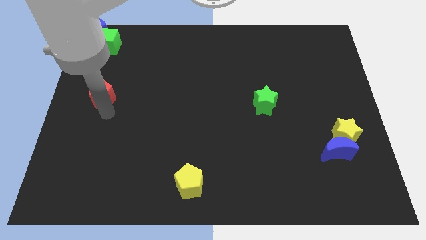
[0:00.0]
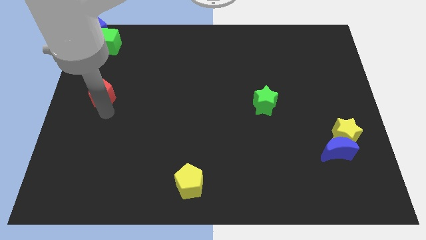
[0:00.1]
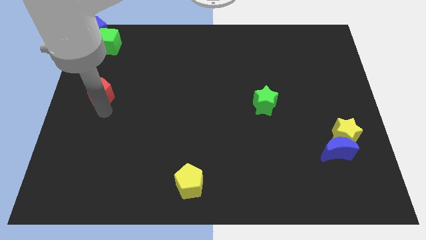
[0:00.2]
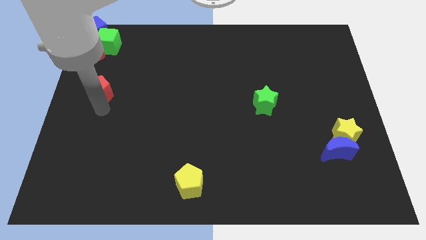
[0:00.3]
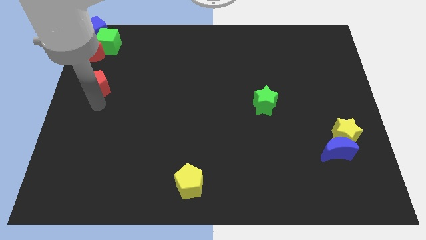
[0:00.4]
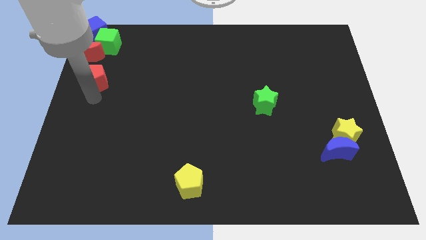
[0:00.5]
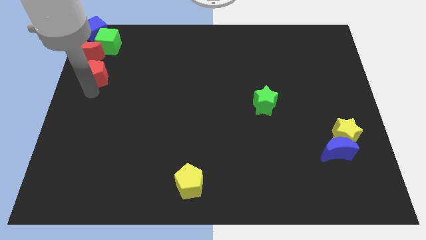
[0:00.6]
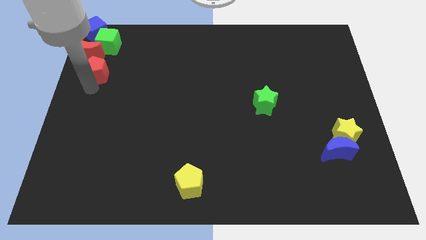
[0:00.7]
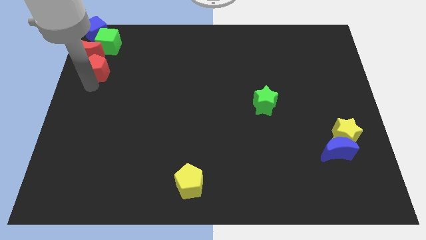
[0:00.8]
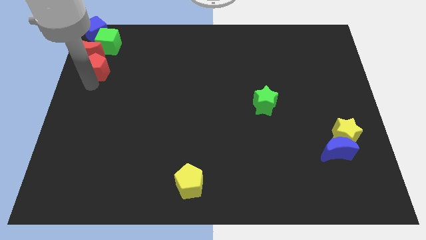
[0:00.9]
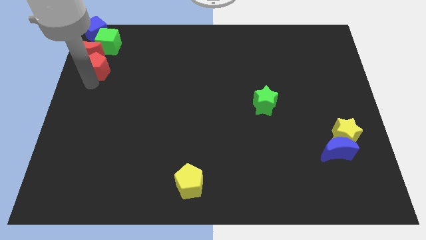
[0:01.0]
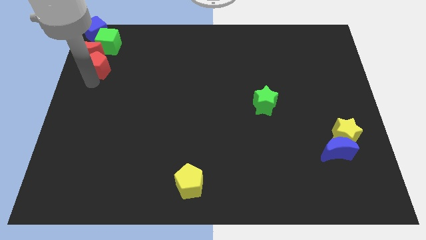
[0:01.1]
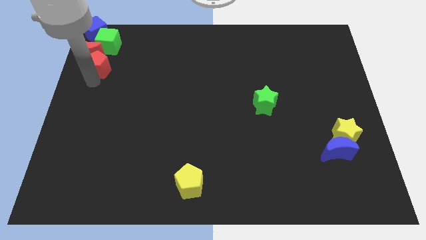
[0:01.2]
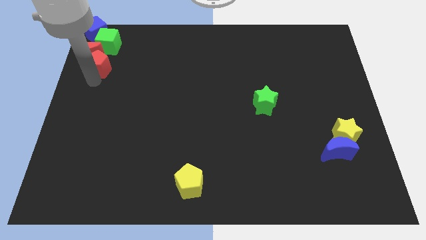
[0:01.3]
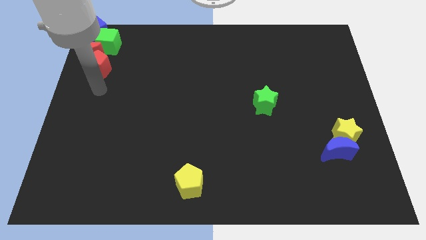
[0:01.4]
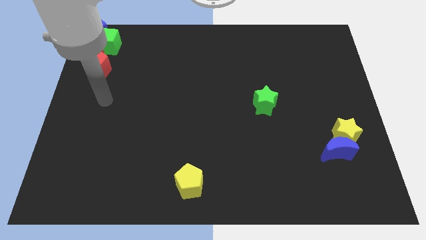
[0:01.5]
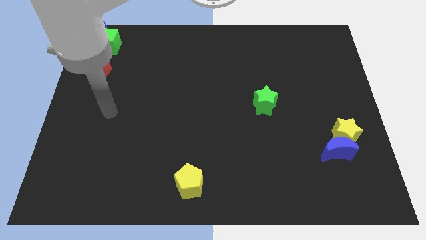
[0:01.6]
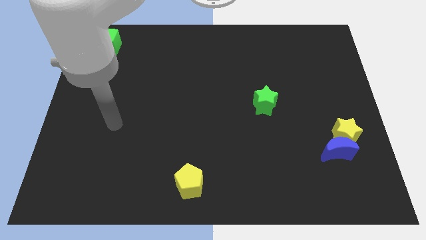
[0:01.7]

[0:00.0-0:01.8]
move red pentagon into red crescent

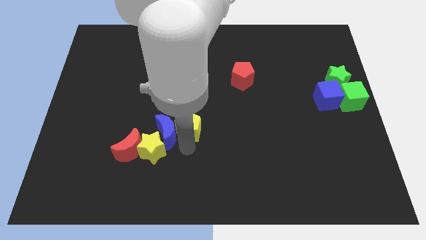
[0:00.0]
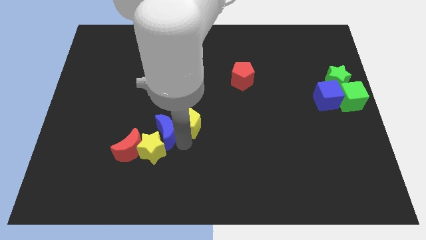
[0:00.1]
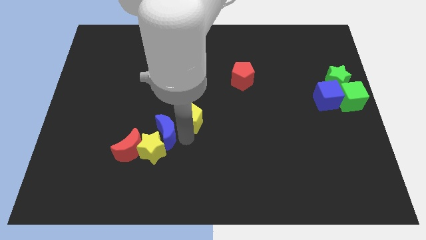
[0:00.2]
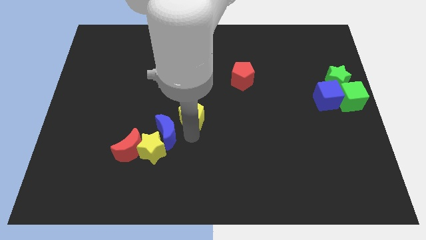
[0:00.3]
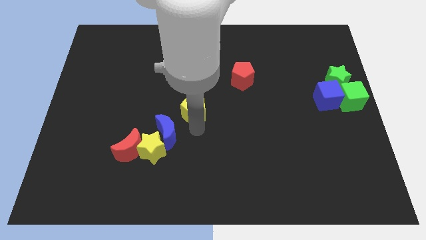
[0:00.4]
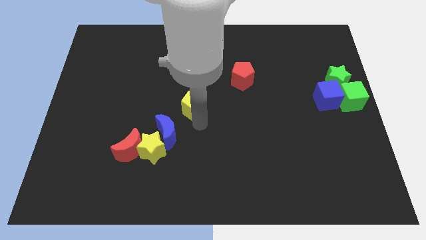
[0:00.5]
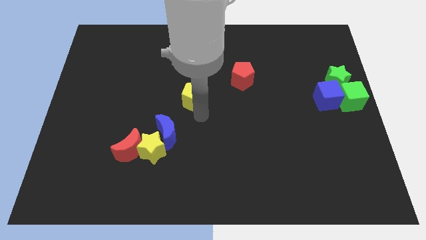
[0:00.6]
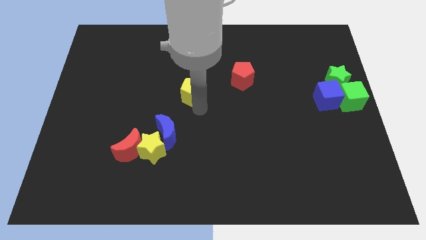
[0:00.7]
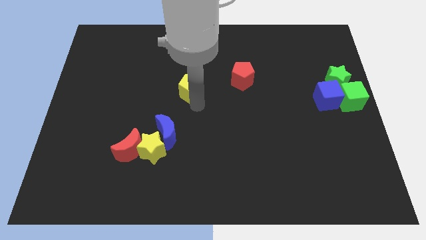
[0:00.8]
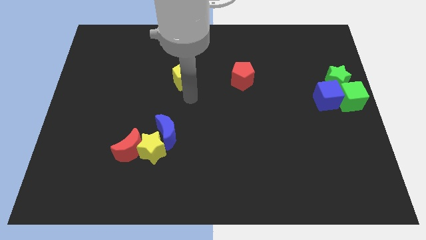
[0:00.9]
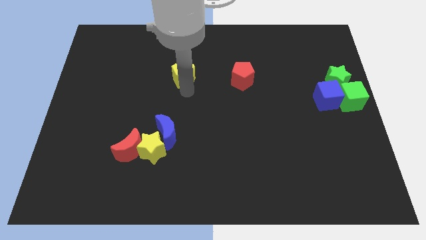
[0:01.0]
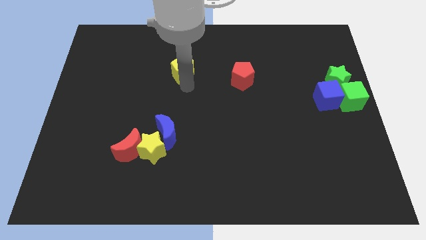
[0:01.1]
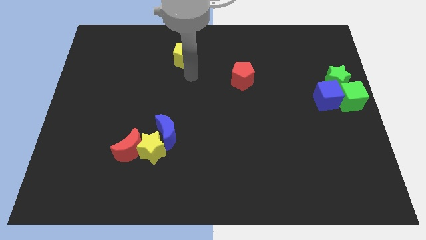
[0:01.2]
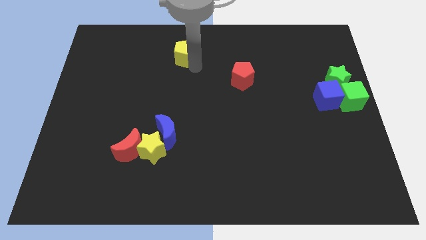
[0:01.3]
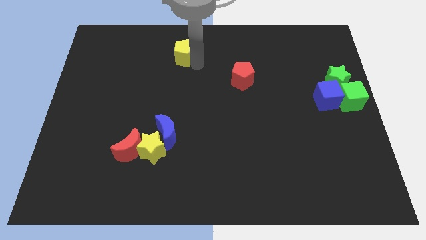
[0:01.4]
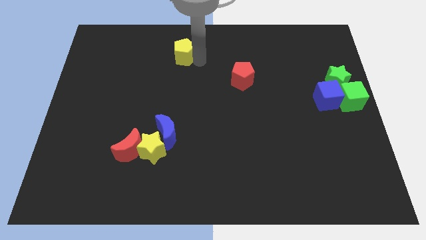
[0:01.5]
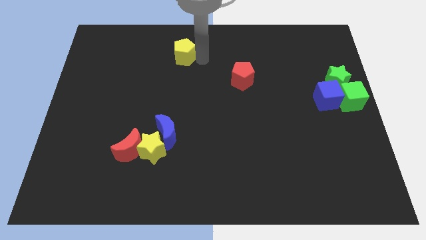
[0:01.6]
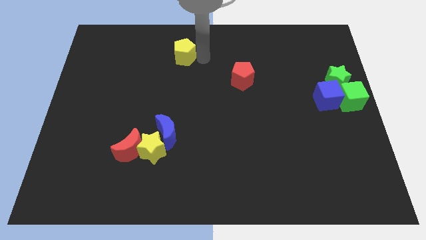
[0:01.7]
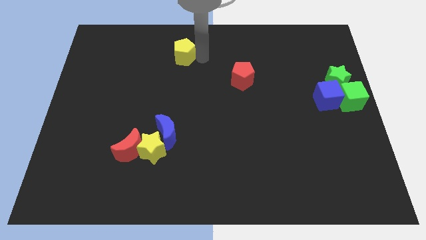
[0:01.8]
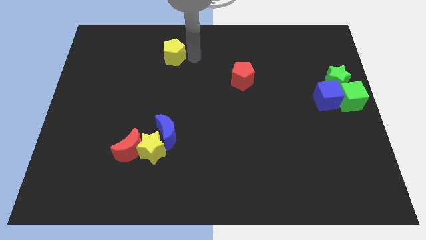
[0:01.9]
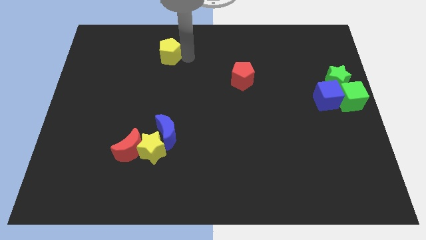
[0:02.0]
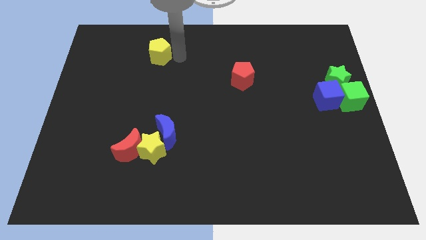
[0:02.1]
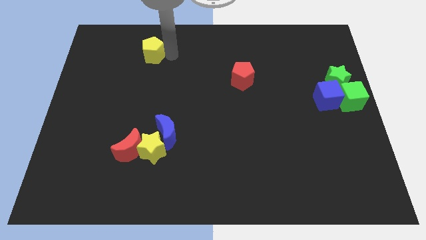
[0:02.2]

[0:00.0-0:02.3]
push the yellow pentagon to the top of the red crescent

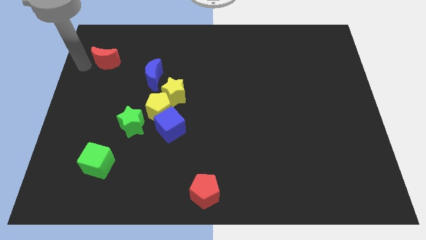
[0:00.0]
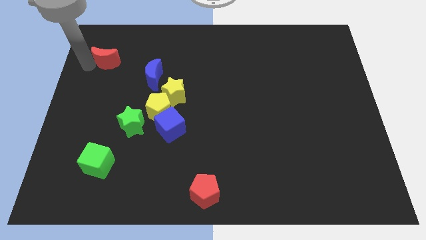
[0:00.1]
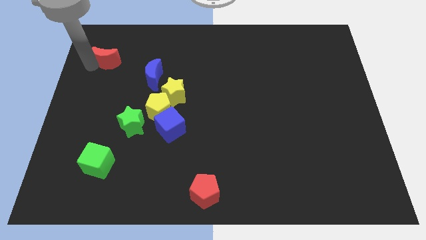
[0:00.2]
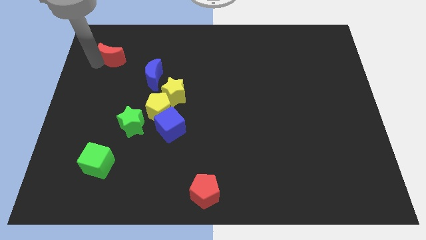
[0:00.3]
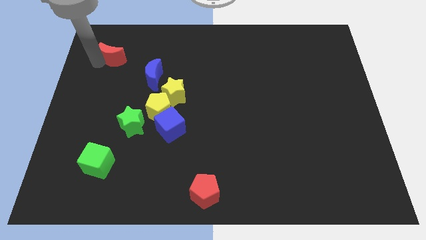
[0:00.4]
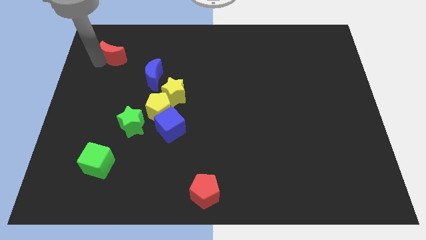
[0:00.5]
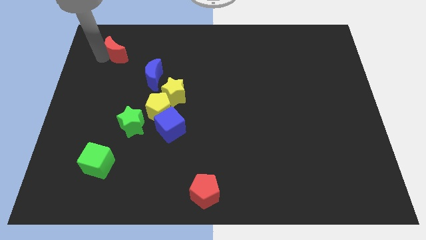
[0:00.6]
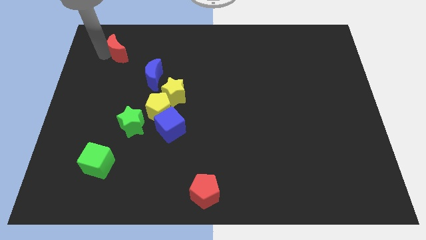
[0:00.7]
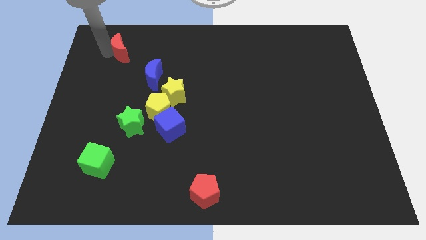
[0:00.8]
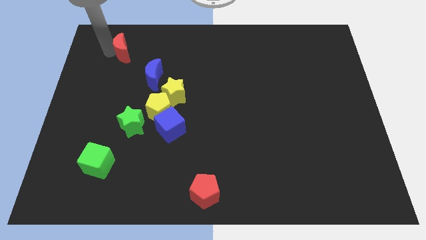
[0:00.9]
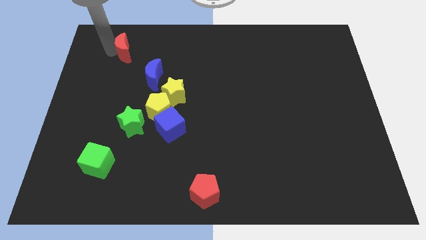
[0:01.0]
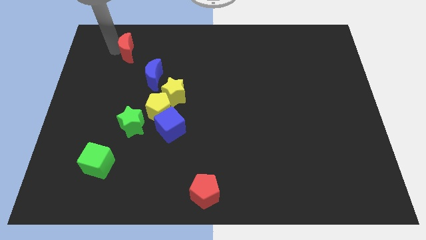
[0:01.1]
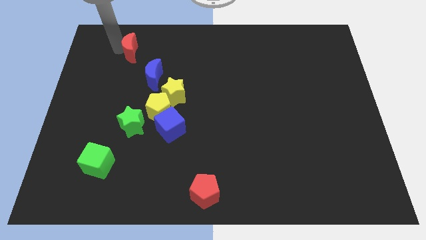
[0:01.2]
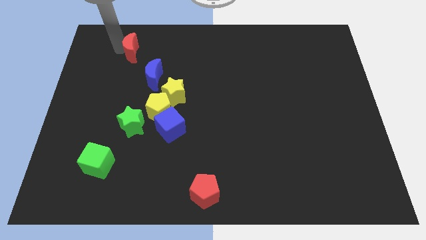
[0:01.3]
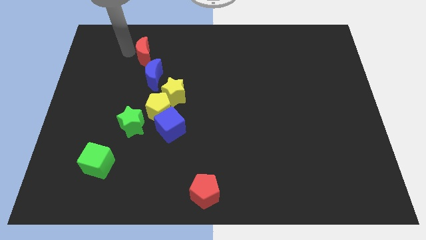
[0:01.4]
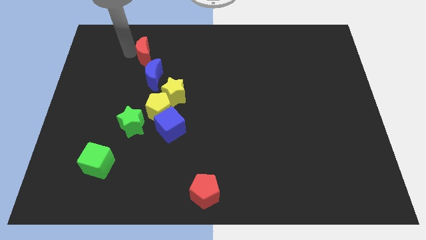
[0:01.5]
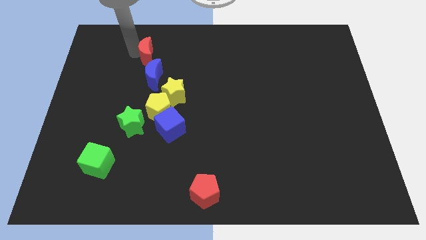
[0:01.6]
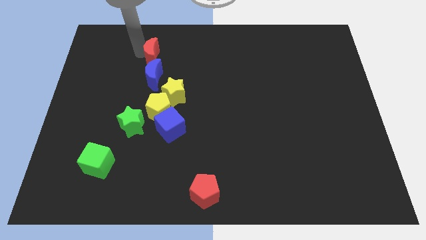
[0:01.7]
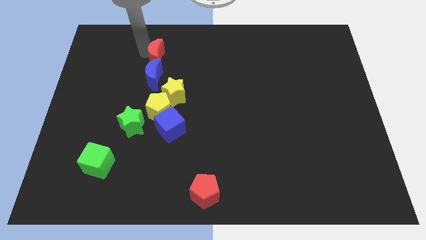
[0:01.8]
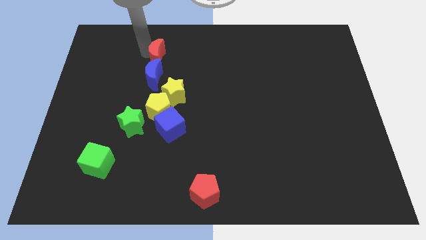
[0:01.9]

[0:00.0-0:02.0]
place the red crescent above the blue moon

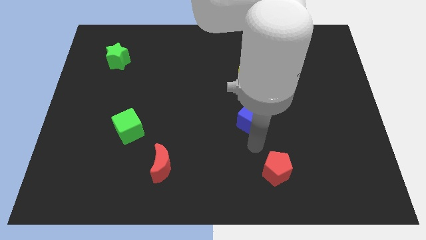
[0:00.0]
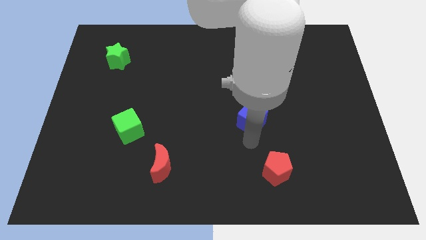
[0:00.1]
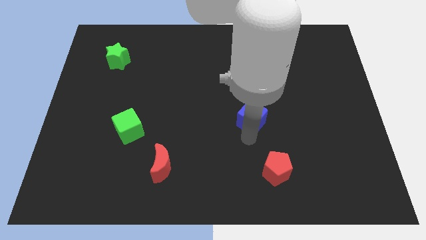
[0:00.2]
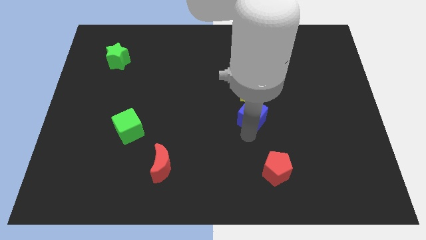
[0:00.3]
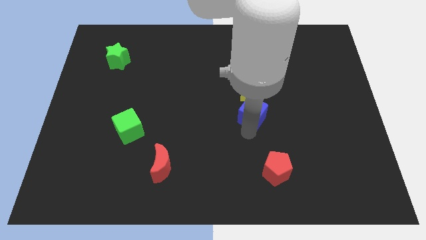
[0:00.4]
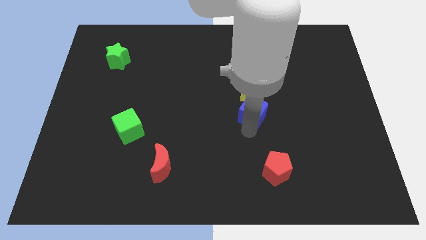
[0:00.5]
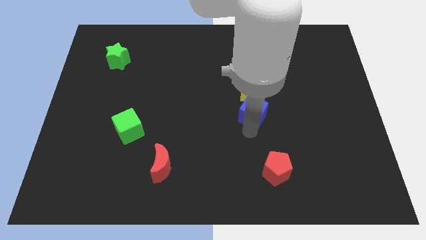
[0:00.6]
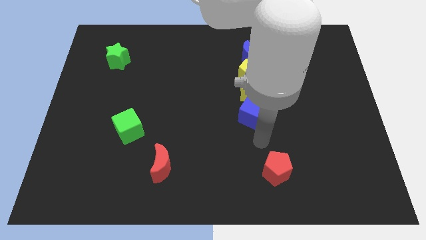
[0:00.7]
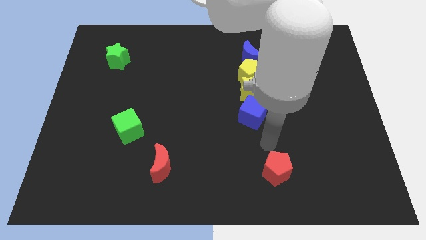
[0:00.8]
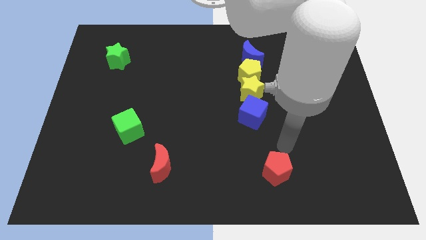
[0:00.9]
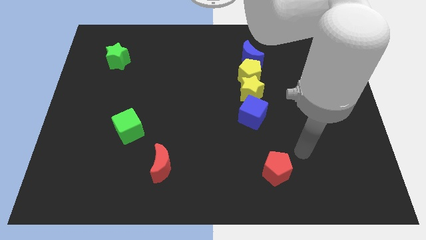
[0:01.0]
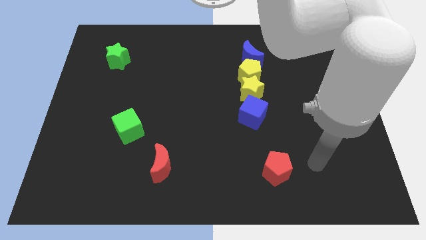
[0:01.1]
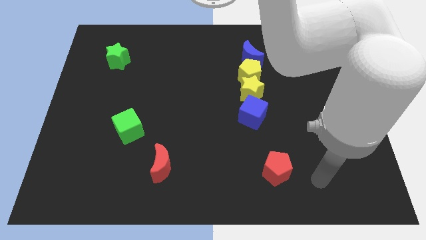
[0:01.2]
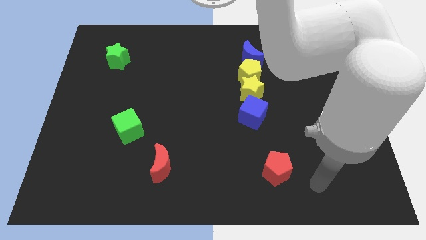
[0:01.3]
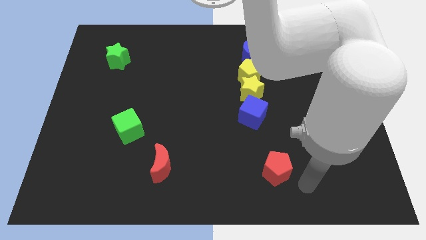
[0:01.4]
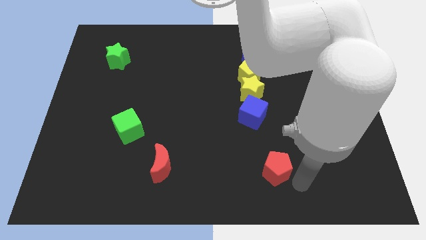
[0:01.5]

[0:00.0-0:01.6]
push the blue cube towards top

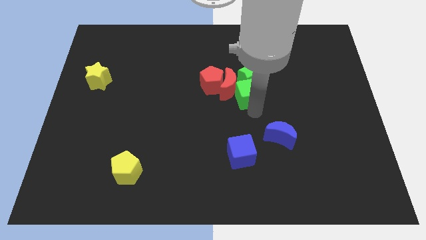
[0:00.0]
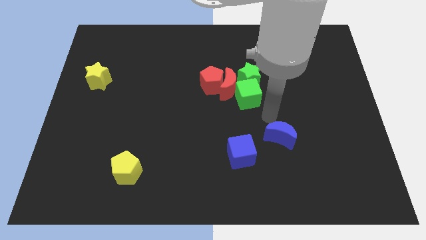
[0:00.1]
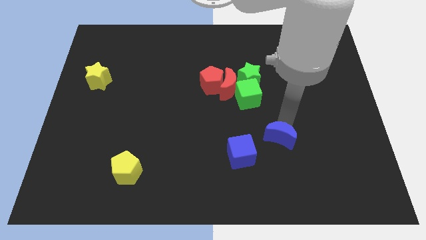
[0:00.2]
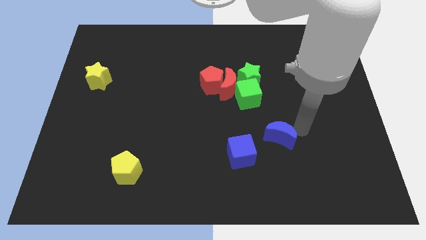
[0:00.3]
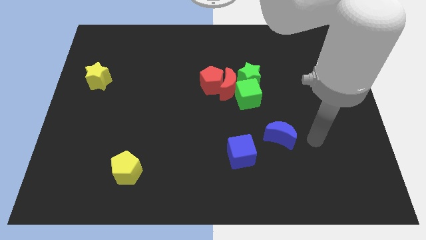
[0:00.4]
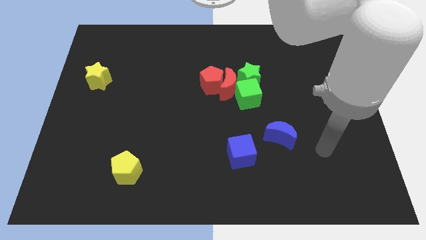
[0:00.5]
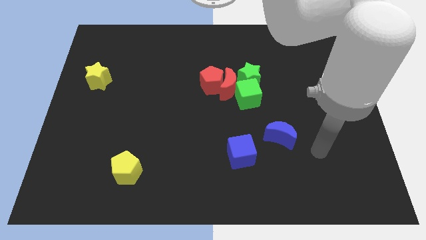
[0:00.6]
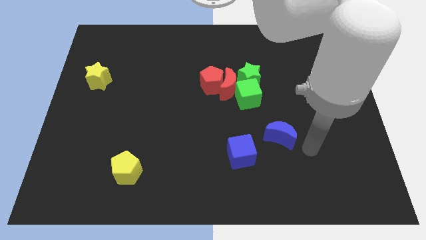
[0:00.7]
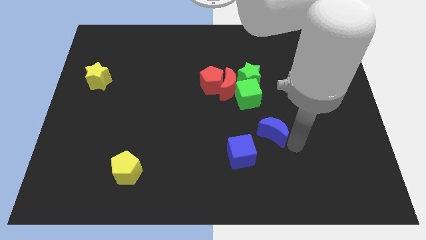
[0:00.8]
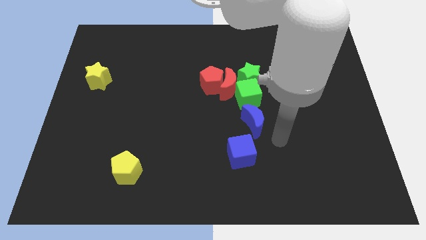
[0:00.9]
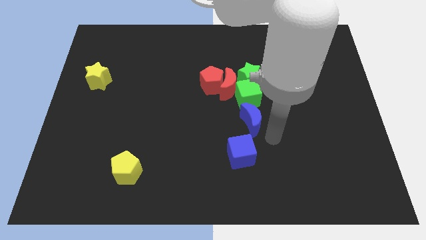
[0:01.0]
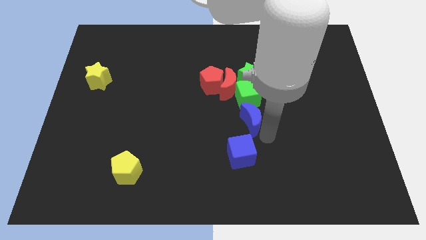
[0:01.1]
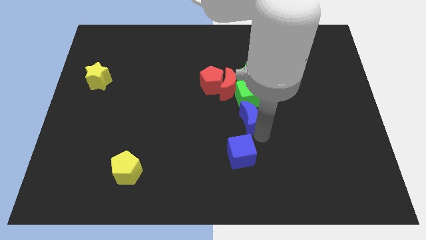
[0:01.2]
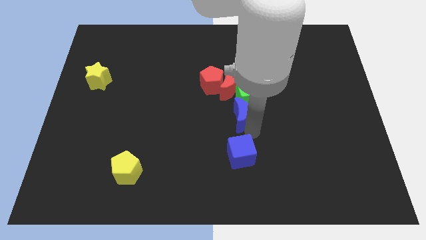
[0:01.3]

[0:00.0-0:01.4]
push the blue crescent to the top of the blue cube
